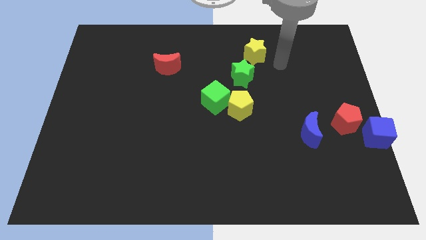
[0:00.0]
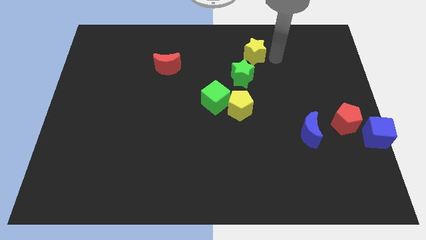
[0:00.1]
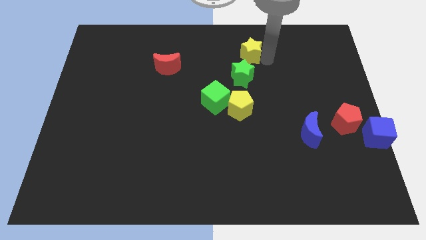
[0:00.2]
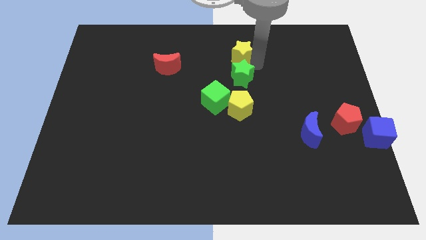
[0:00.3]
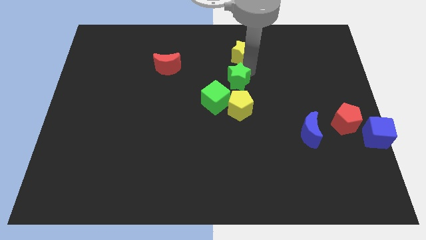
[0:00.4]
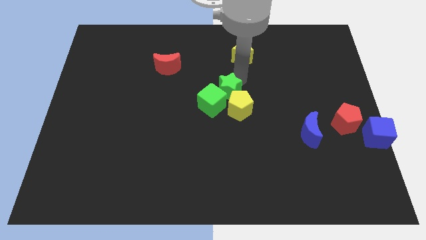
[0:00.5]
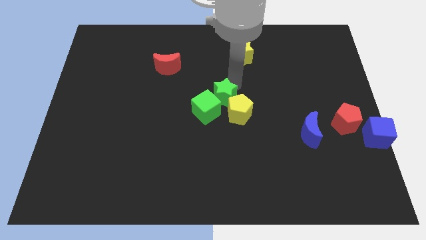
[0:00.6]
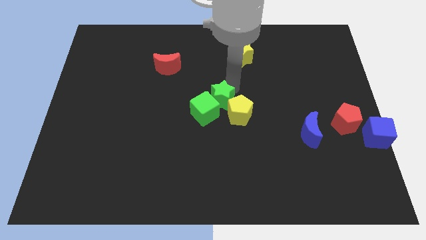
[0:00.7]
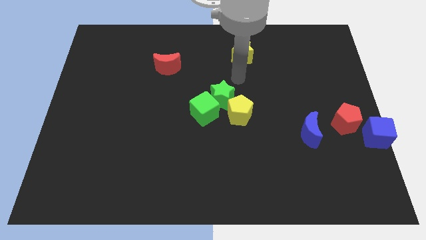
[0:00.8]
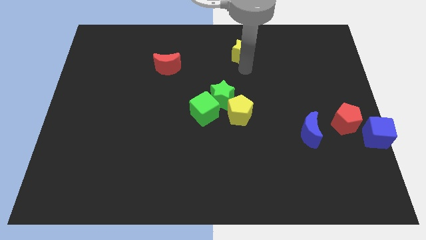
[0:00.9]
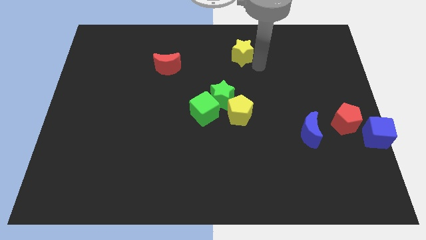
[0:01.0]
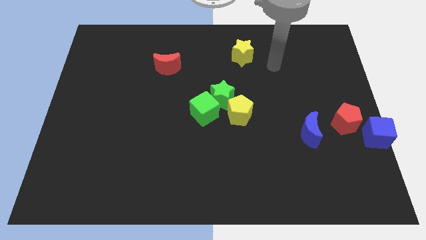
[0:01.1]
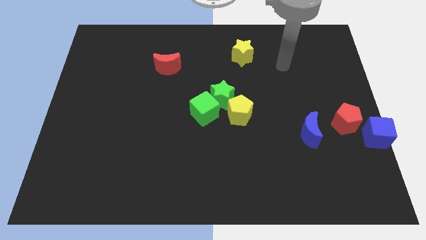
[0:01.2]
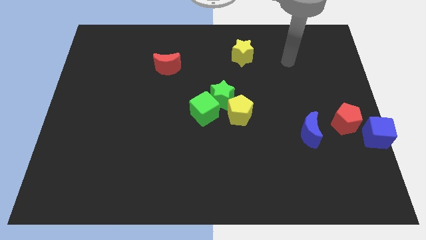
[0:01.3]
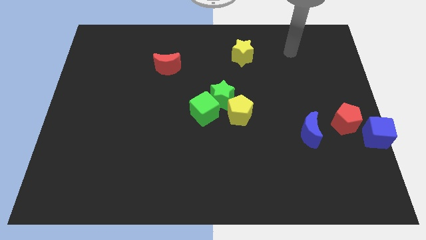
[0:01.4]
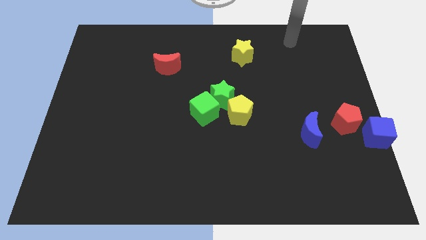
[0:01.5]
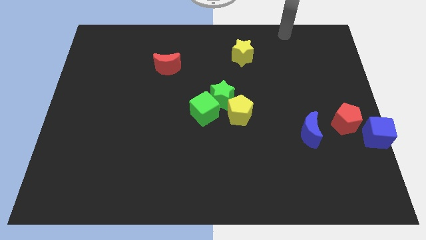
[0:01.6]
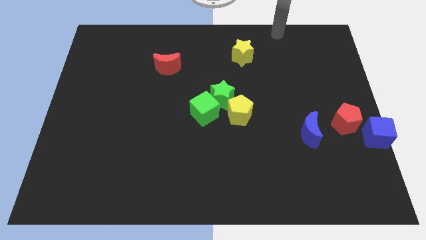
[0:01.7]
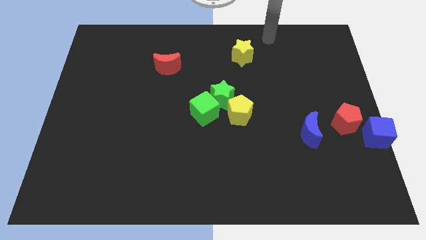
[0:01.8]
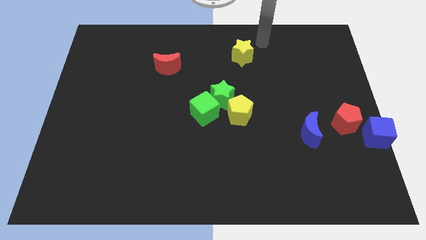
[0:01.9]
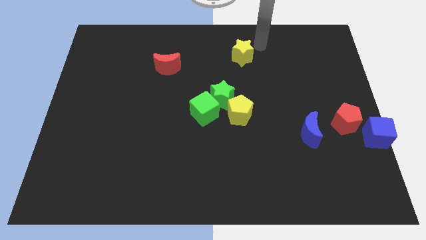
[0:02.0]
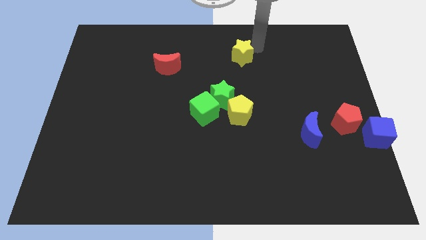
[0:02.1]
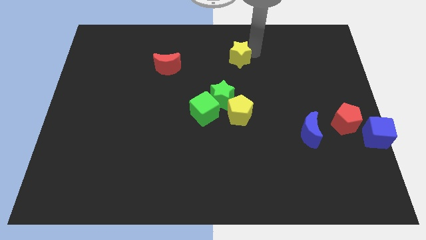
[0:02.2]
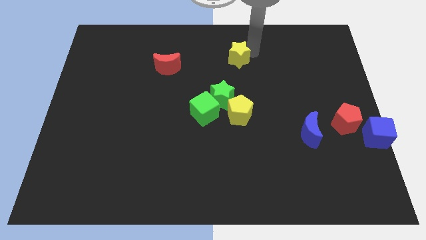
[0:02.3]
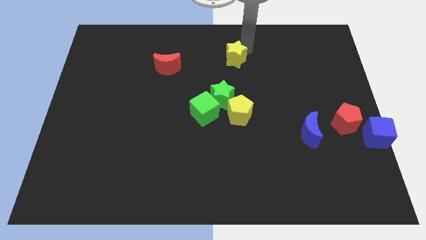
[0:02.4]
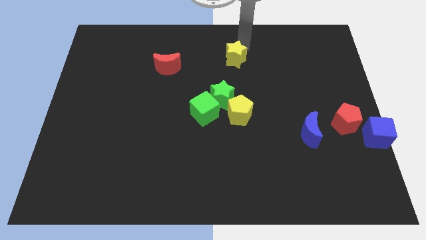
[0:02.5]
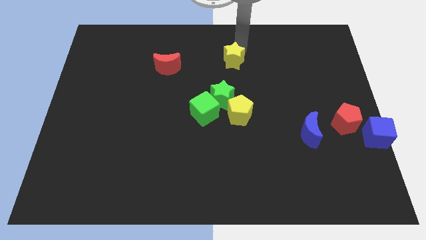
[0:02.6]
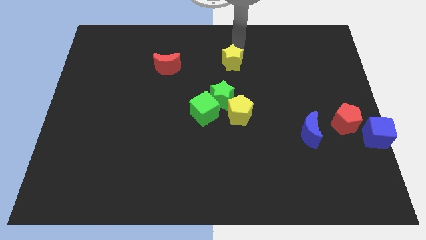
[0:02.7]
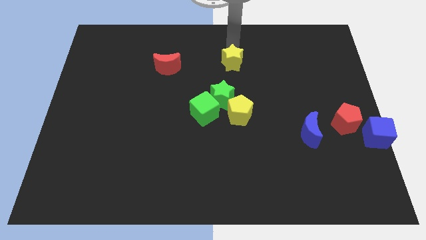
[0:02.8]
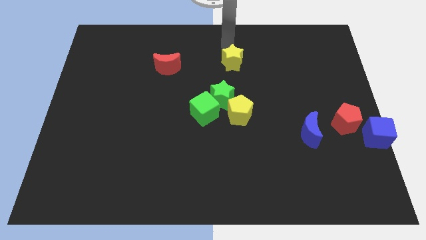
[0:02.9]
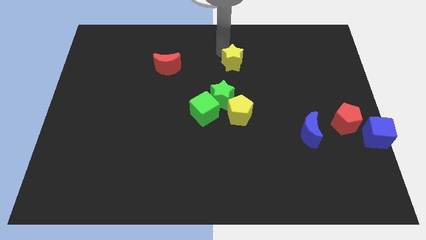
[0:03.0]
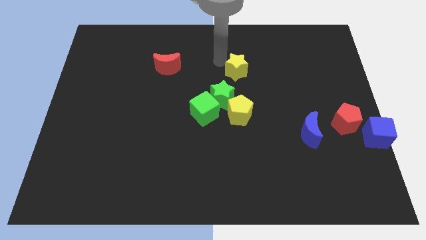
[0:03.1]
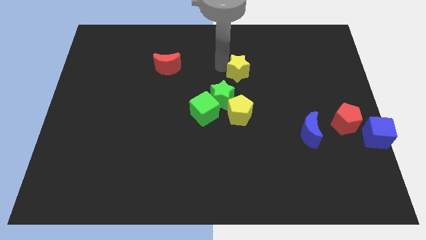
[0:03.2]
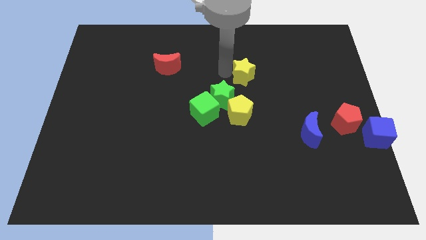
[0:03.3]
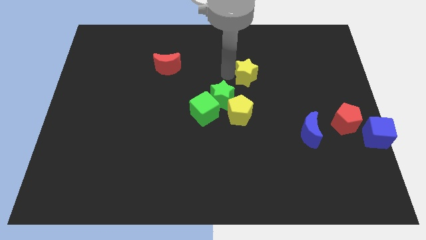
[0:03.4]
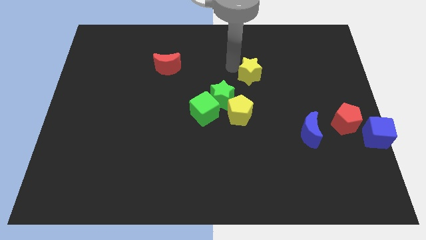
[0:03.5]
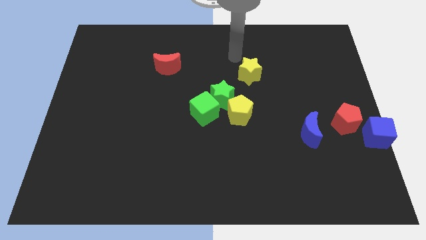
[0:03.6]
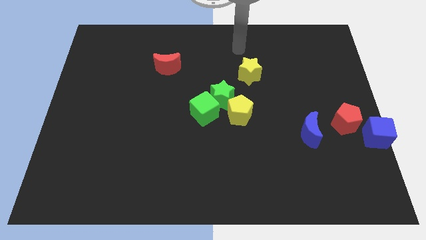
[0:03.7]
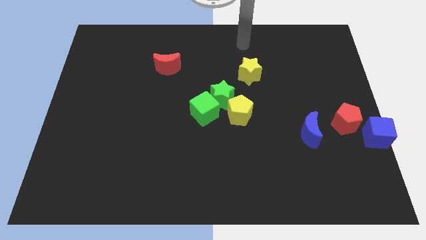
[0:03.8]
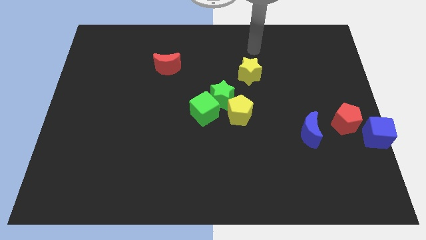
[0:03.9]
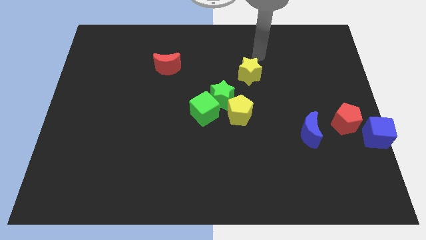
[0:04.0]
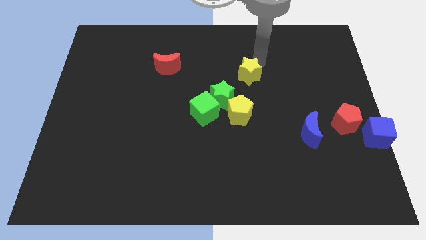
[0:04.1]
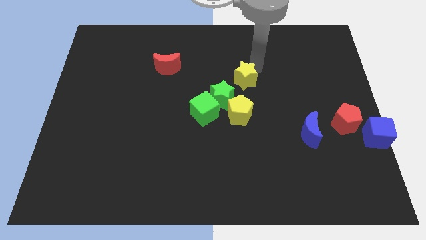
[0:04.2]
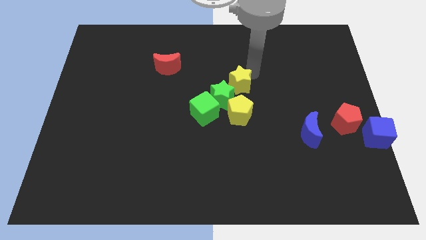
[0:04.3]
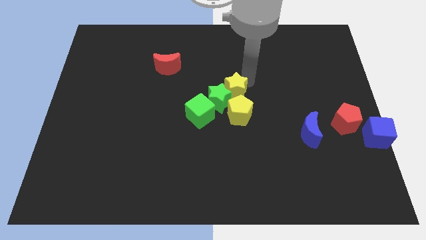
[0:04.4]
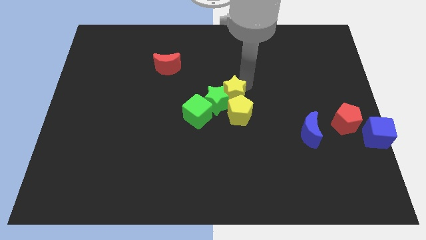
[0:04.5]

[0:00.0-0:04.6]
push green star and yellow star into the group of blocks

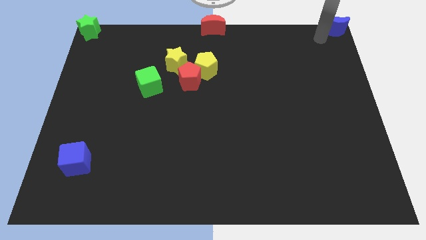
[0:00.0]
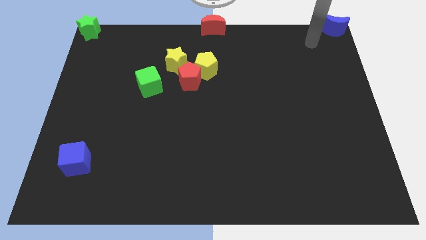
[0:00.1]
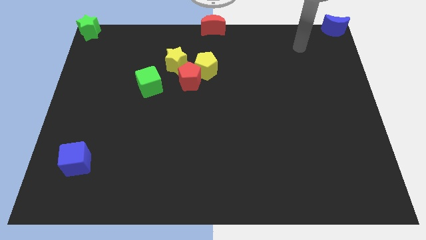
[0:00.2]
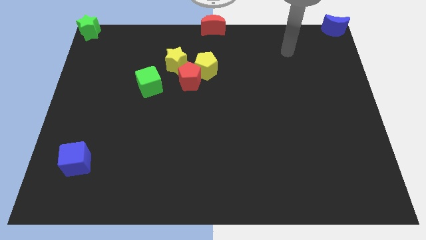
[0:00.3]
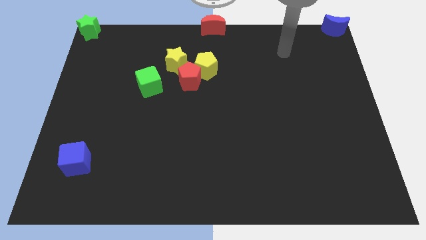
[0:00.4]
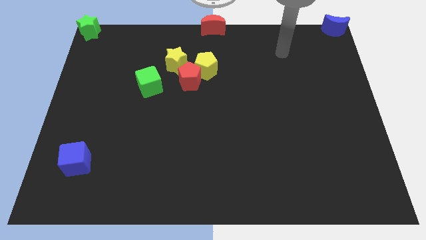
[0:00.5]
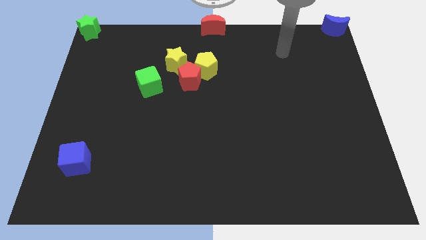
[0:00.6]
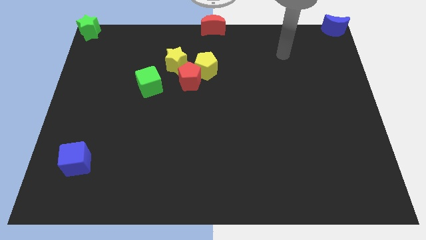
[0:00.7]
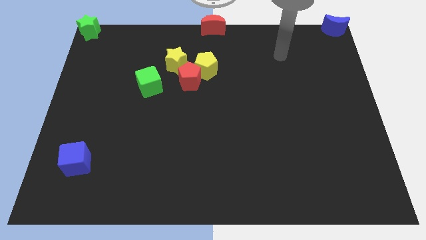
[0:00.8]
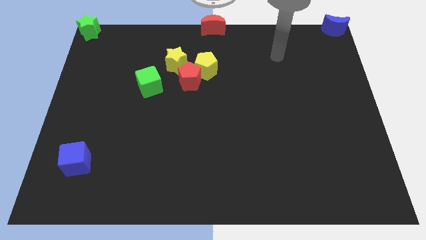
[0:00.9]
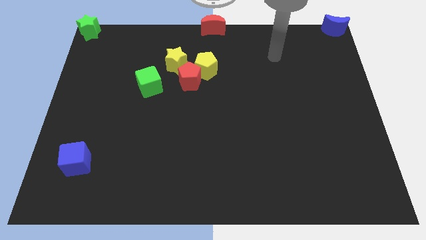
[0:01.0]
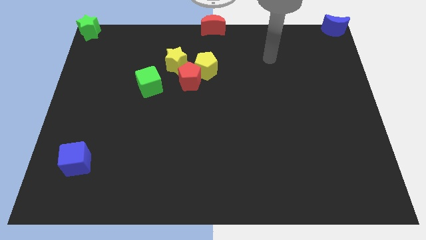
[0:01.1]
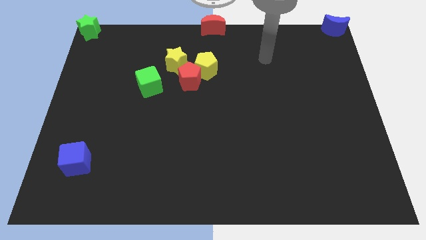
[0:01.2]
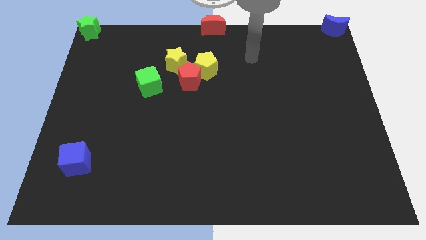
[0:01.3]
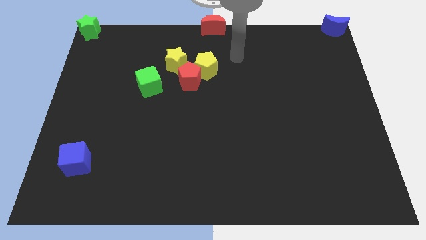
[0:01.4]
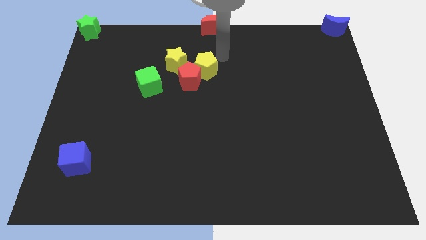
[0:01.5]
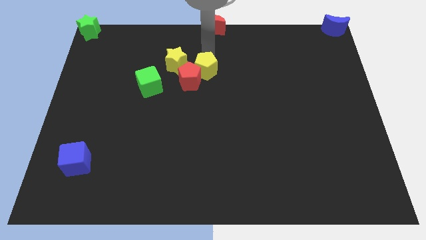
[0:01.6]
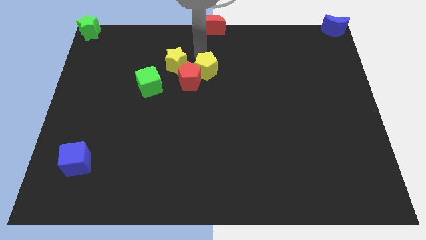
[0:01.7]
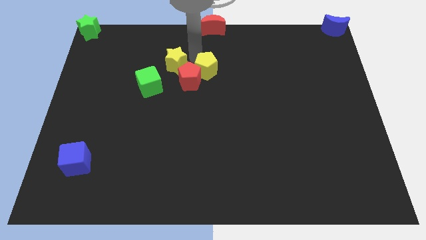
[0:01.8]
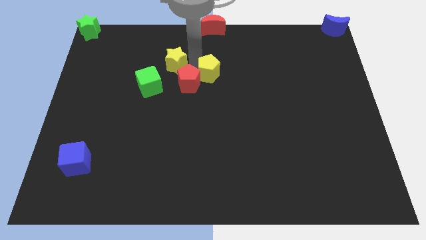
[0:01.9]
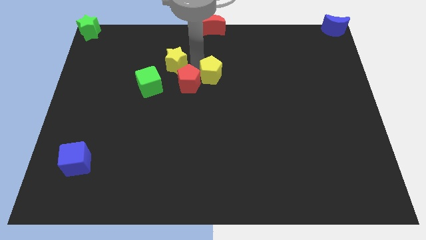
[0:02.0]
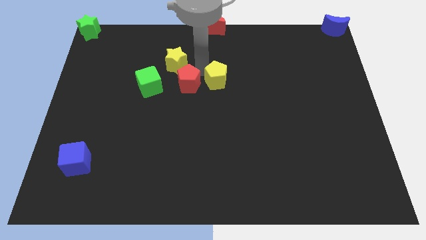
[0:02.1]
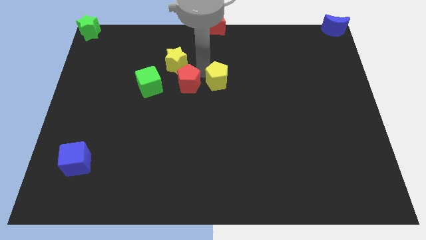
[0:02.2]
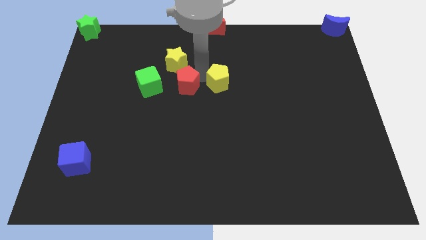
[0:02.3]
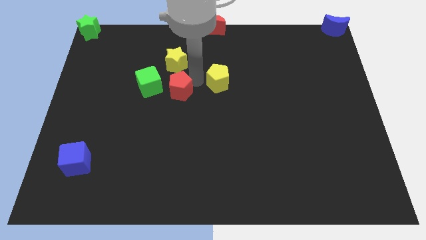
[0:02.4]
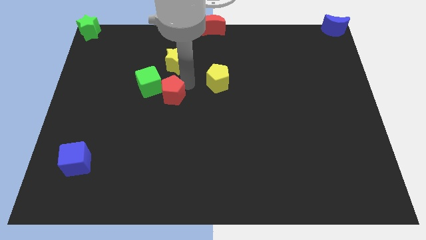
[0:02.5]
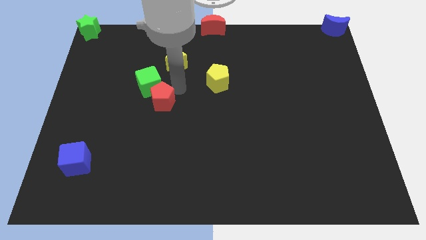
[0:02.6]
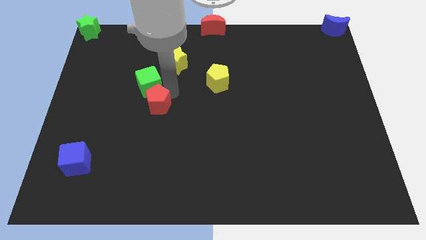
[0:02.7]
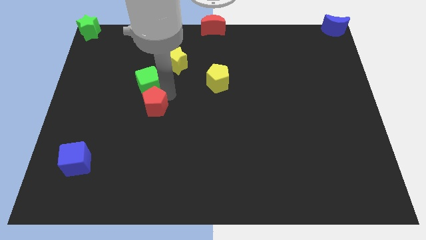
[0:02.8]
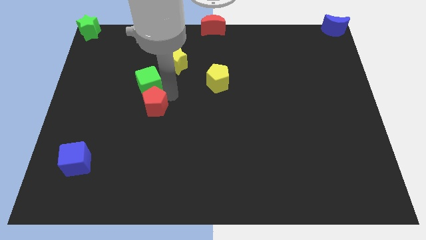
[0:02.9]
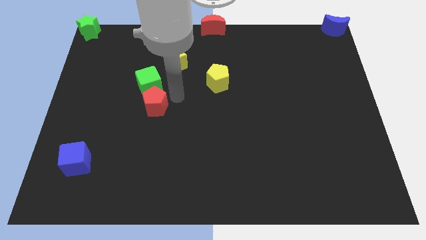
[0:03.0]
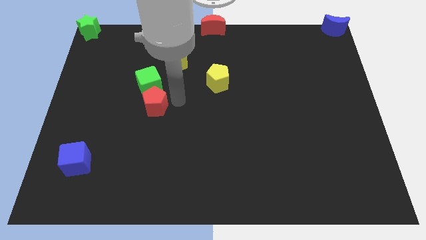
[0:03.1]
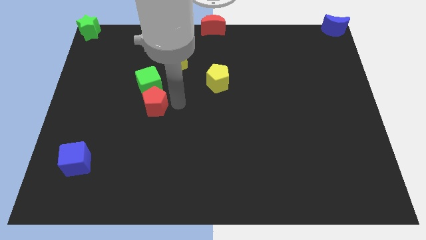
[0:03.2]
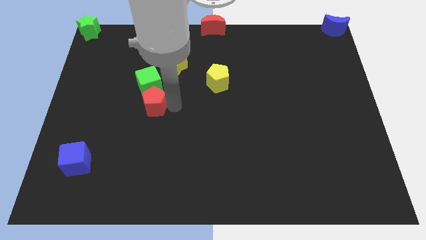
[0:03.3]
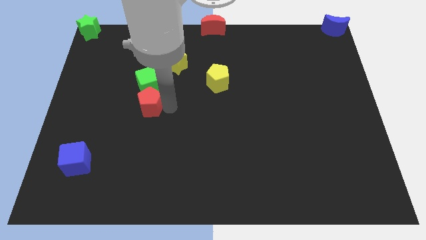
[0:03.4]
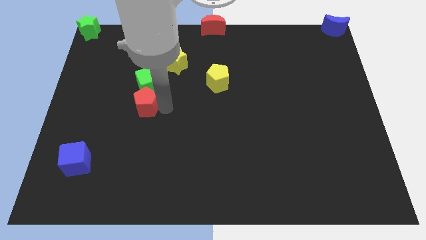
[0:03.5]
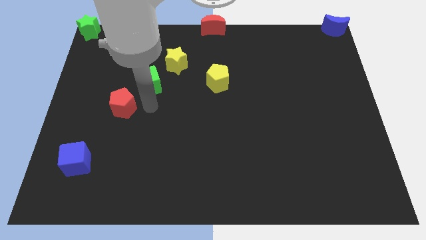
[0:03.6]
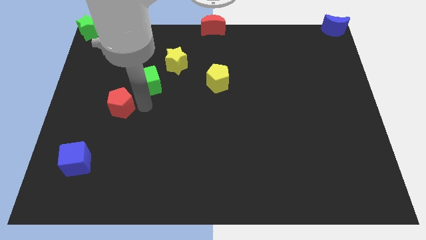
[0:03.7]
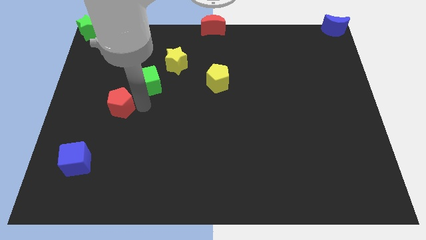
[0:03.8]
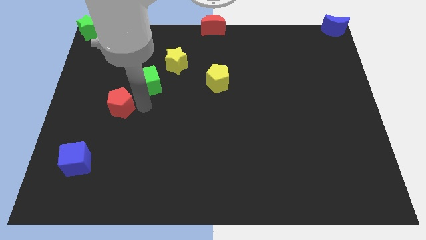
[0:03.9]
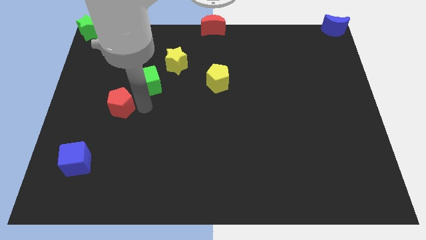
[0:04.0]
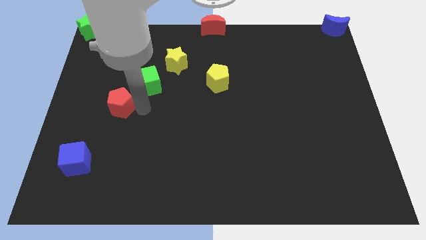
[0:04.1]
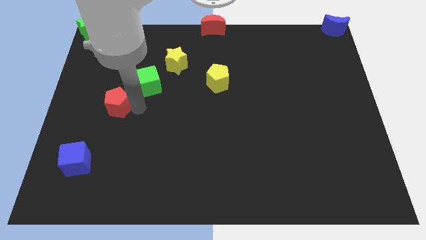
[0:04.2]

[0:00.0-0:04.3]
separate the red pentagon from the yellow pentagon
